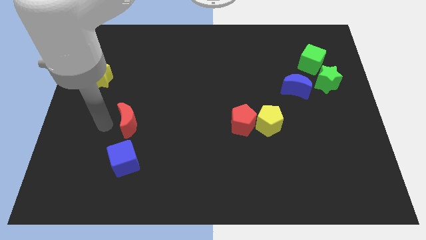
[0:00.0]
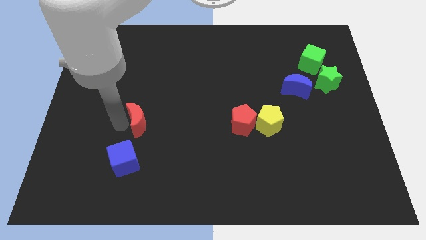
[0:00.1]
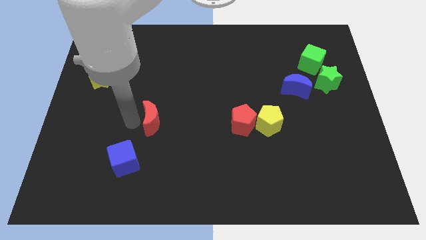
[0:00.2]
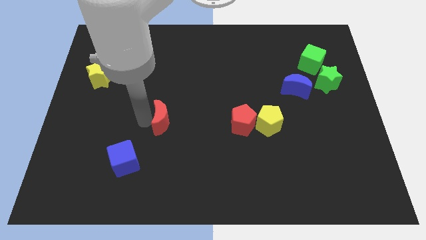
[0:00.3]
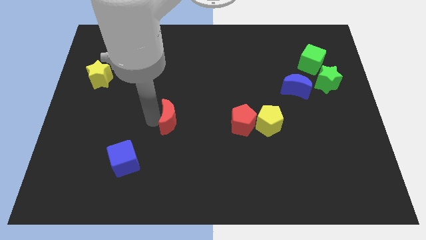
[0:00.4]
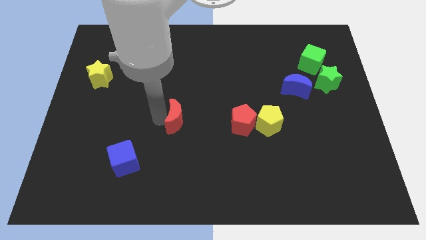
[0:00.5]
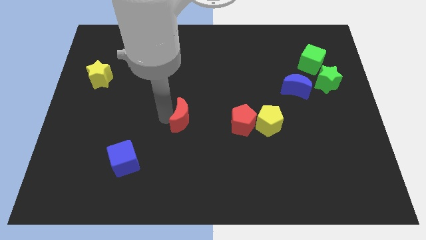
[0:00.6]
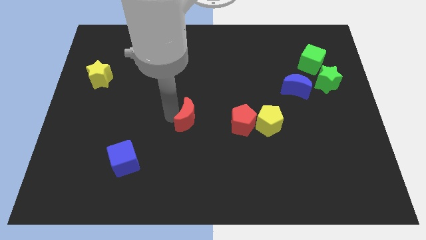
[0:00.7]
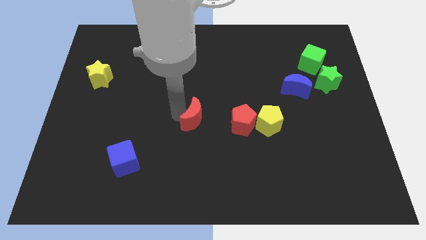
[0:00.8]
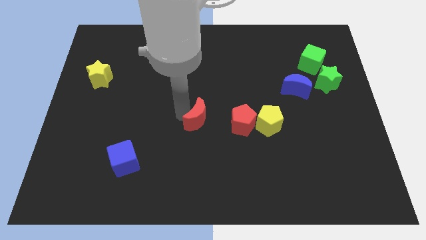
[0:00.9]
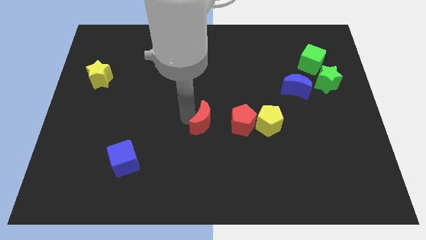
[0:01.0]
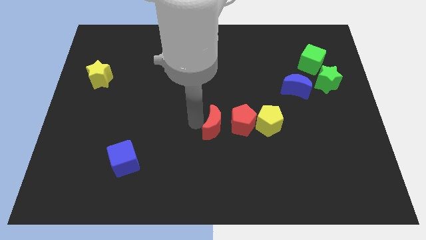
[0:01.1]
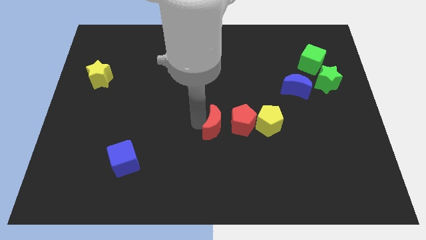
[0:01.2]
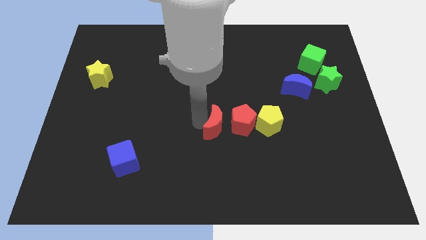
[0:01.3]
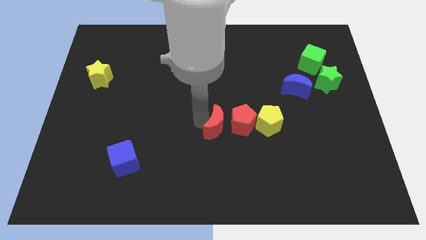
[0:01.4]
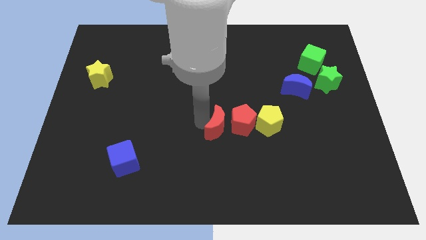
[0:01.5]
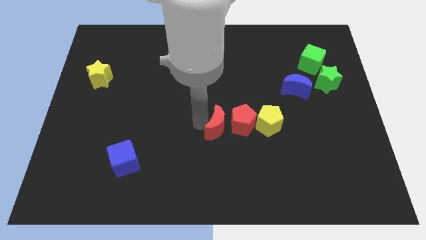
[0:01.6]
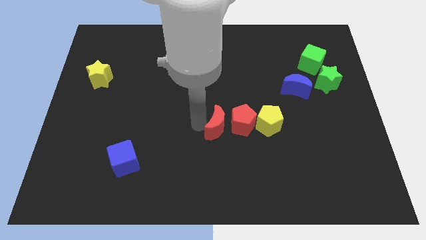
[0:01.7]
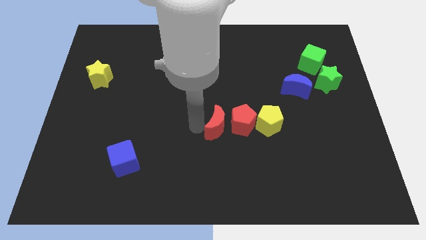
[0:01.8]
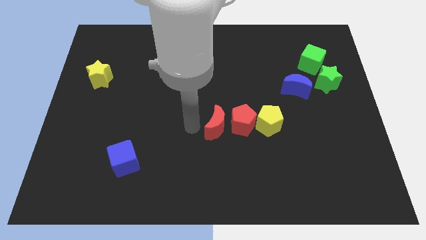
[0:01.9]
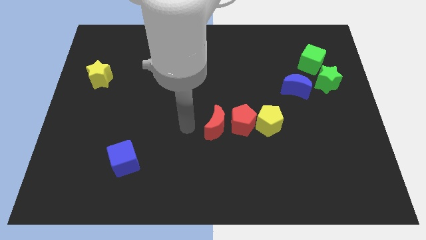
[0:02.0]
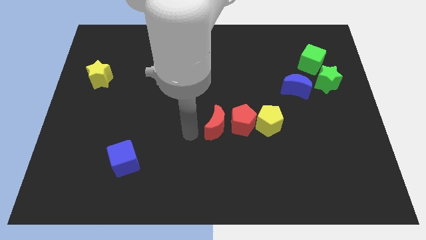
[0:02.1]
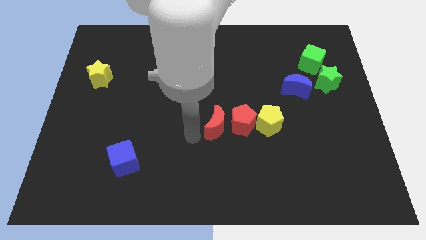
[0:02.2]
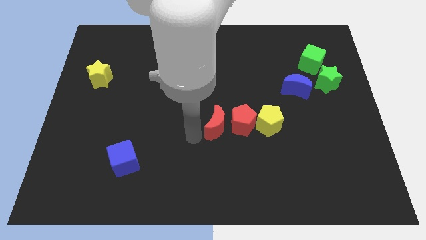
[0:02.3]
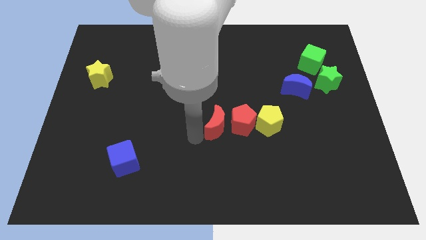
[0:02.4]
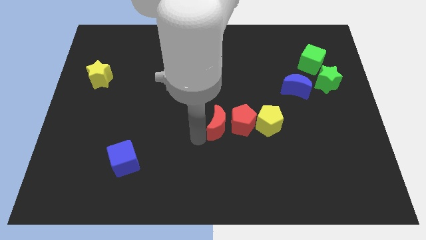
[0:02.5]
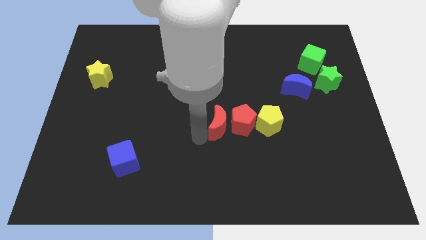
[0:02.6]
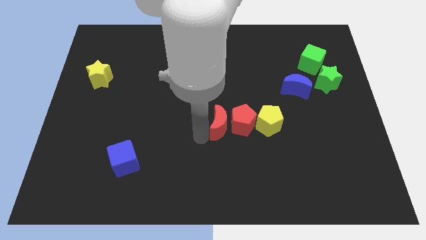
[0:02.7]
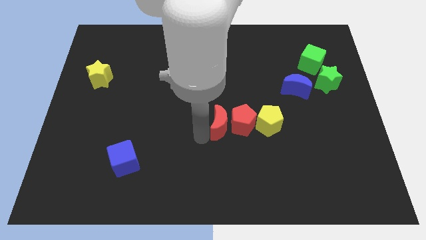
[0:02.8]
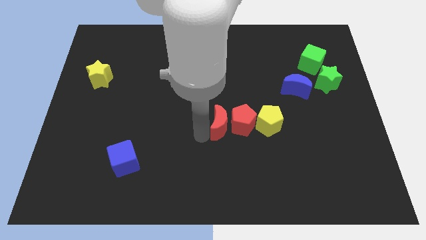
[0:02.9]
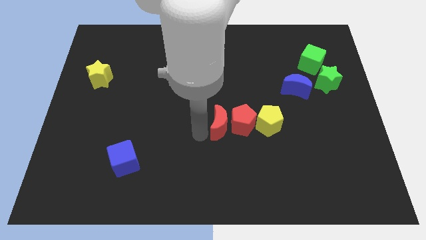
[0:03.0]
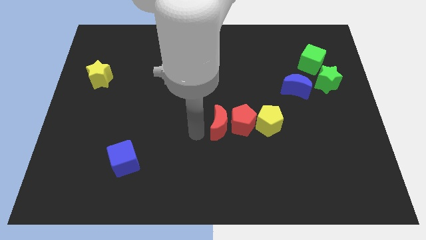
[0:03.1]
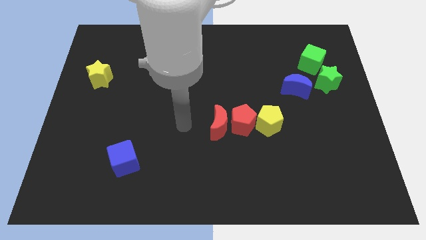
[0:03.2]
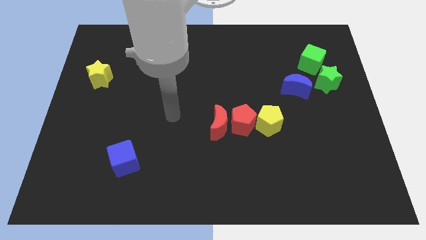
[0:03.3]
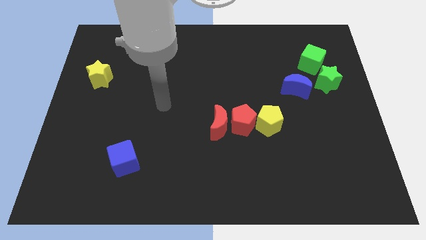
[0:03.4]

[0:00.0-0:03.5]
push the red crescent to the left side of the red pentagon

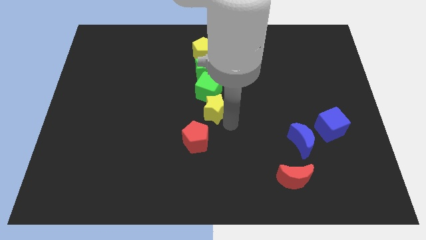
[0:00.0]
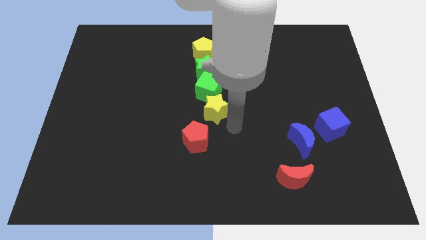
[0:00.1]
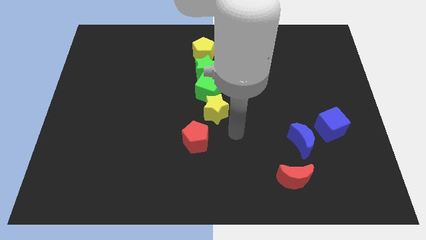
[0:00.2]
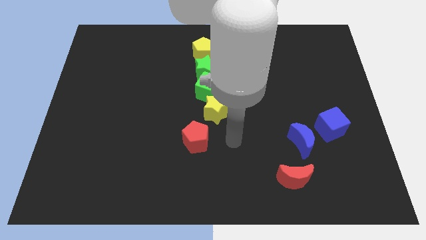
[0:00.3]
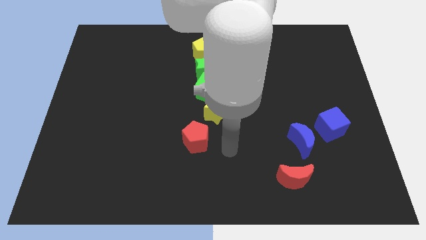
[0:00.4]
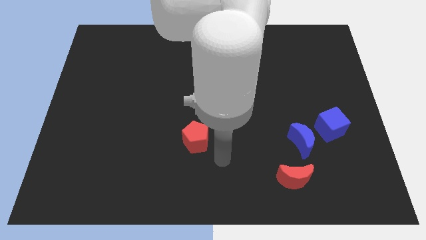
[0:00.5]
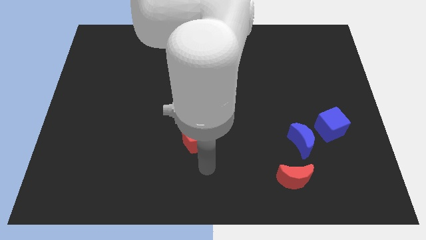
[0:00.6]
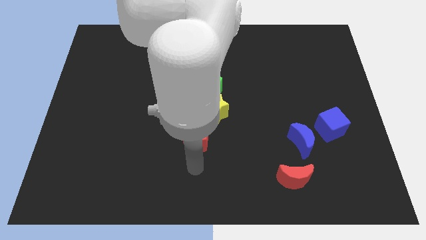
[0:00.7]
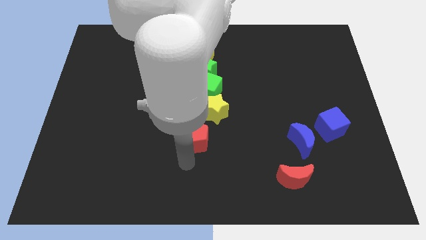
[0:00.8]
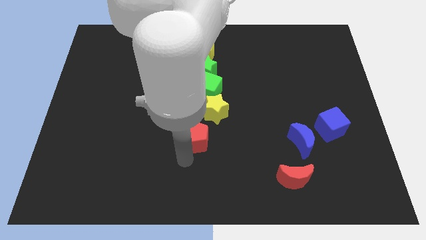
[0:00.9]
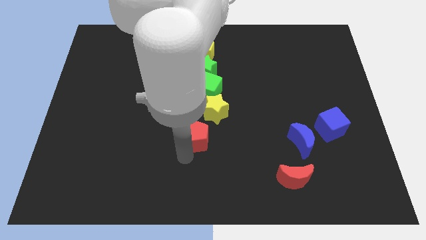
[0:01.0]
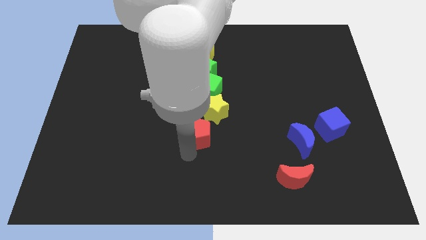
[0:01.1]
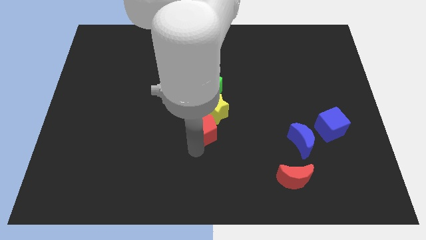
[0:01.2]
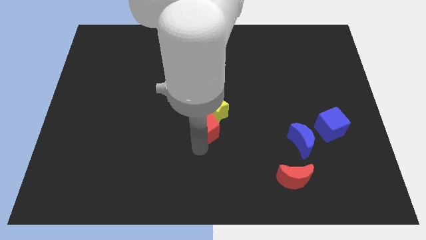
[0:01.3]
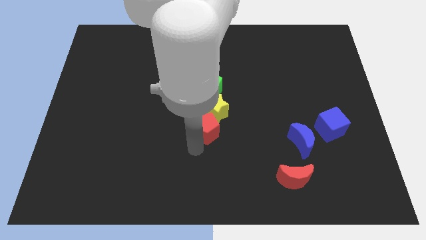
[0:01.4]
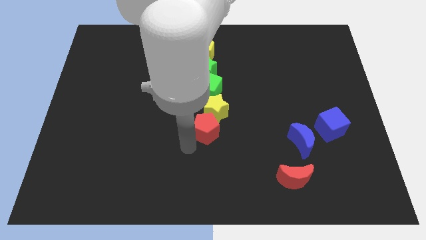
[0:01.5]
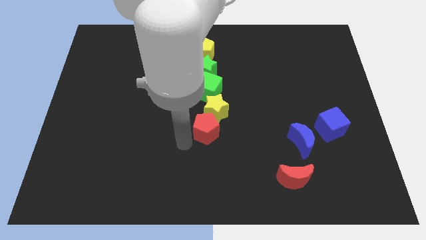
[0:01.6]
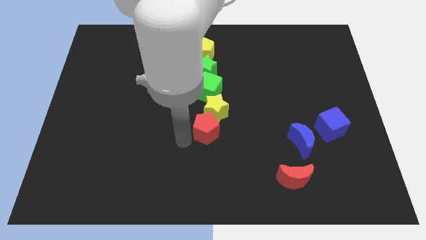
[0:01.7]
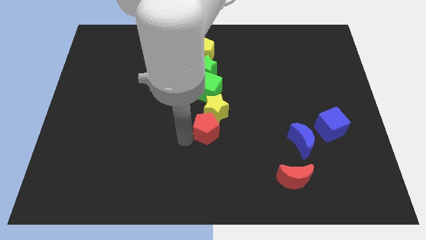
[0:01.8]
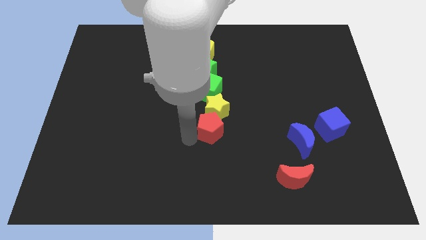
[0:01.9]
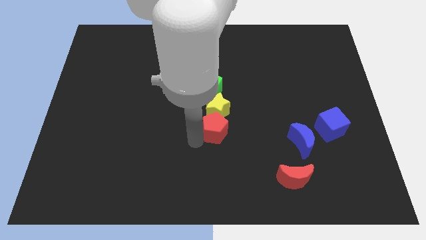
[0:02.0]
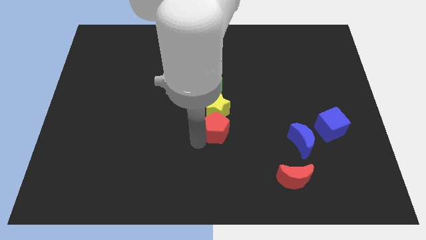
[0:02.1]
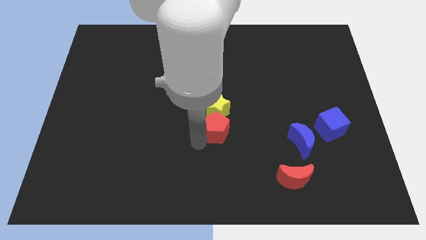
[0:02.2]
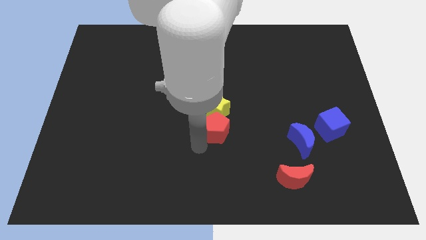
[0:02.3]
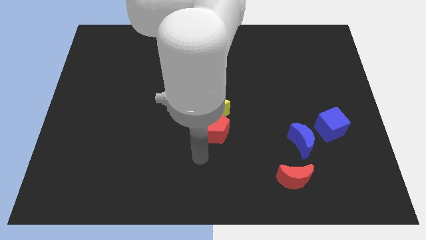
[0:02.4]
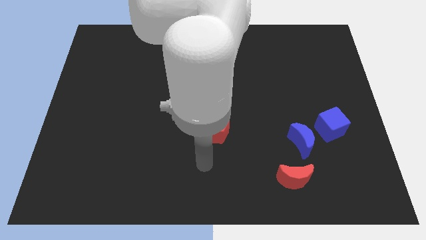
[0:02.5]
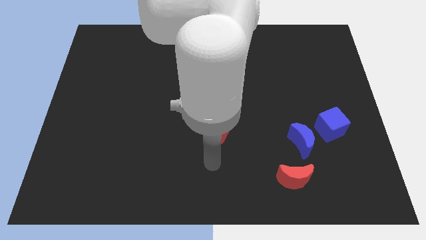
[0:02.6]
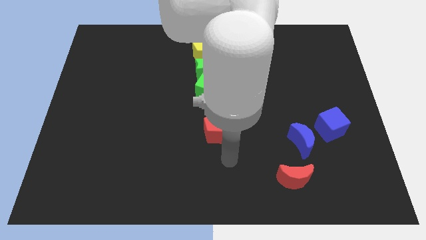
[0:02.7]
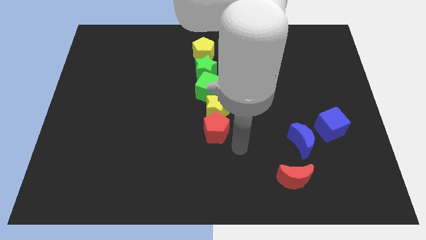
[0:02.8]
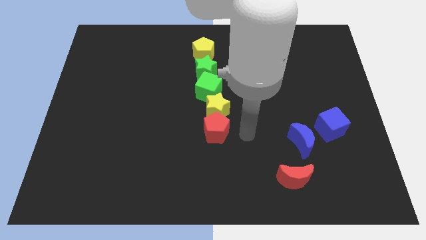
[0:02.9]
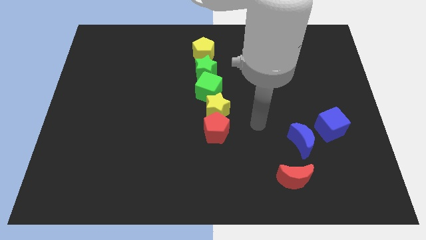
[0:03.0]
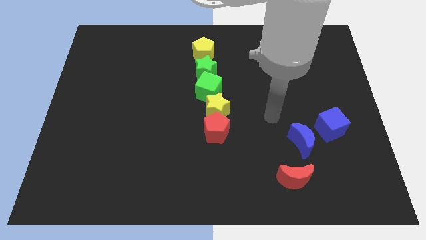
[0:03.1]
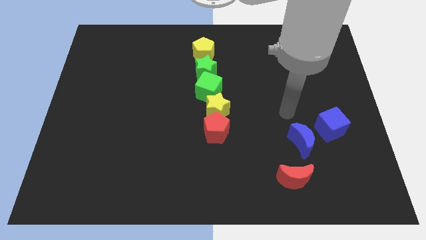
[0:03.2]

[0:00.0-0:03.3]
adjust the red pentagon to the make the vertical line

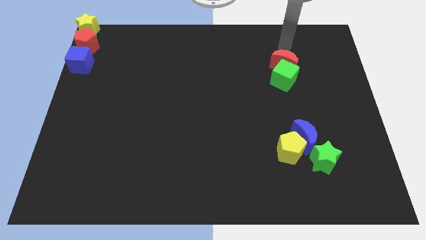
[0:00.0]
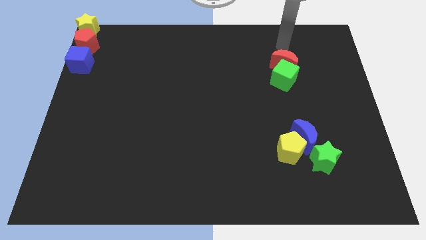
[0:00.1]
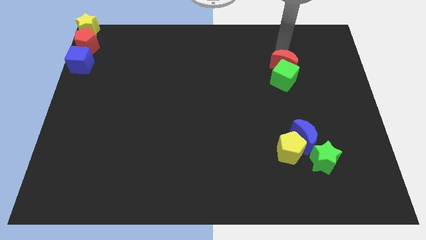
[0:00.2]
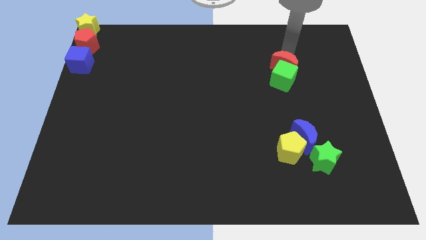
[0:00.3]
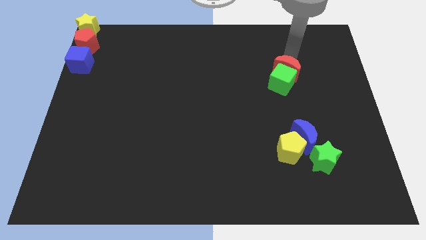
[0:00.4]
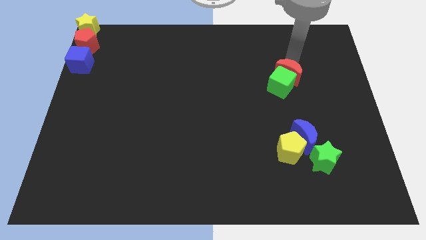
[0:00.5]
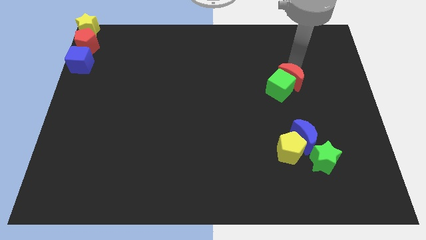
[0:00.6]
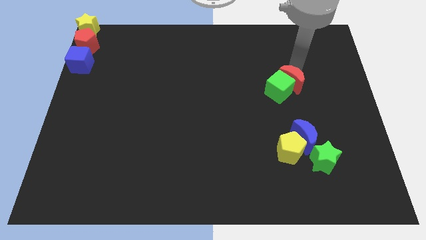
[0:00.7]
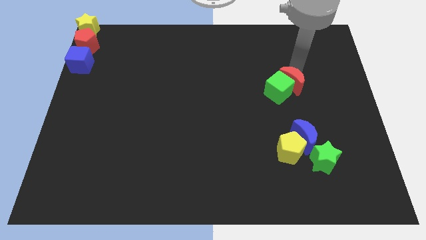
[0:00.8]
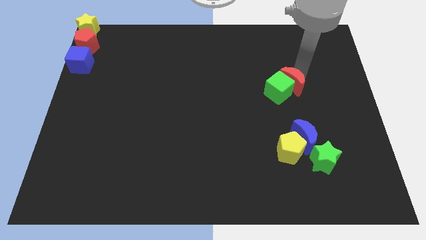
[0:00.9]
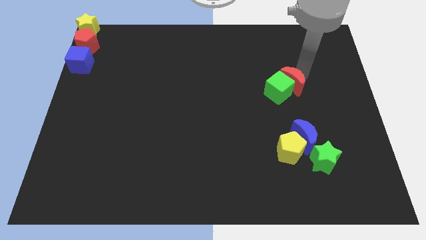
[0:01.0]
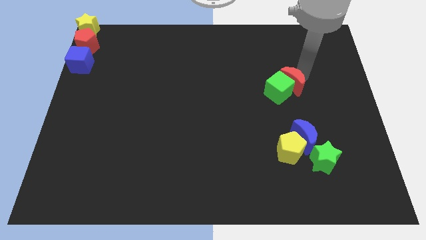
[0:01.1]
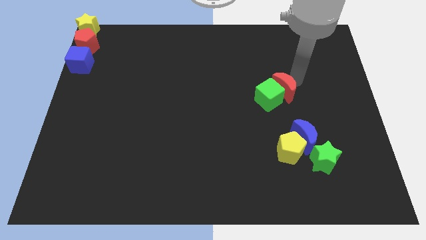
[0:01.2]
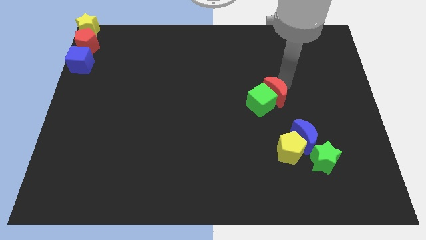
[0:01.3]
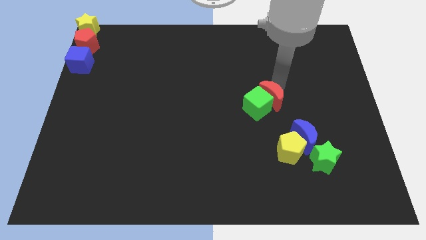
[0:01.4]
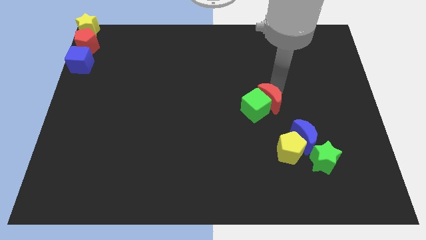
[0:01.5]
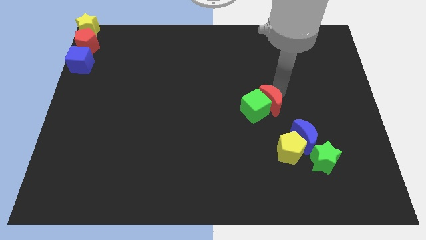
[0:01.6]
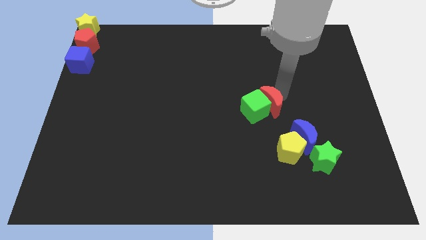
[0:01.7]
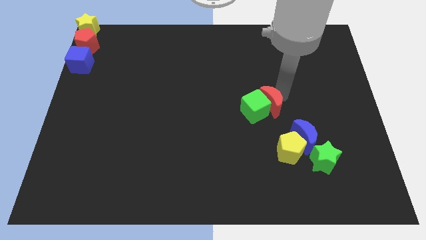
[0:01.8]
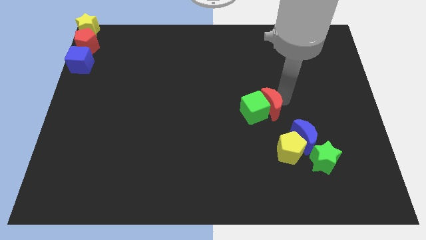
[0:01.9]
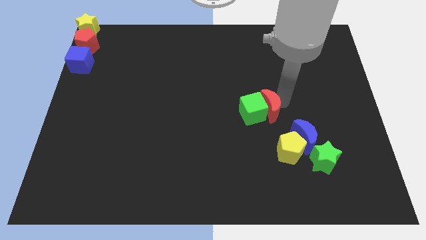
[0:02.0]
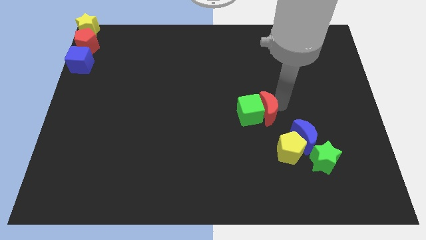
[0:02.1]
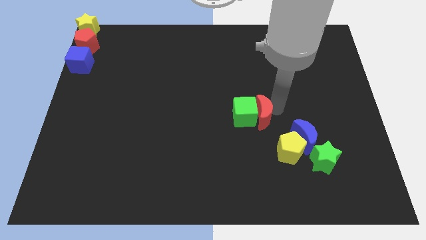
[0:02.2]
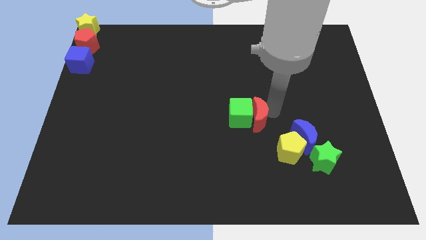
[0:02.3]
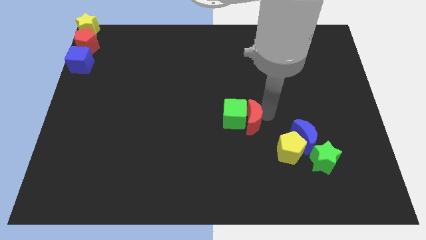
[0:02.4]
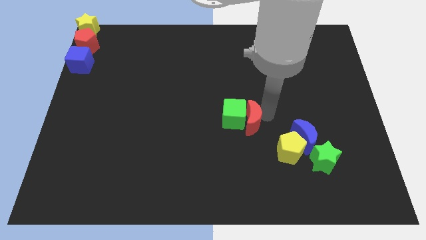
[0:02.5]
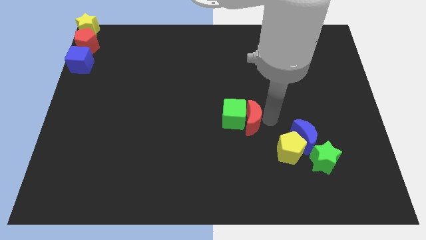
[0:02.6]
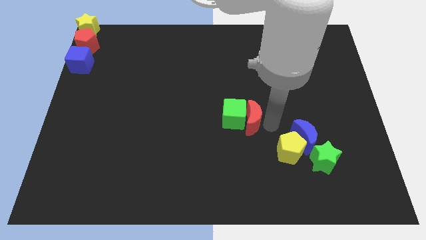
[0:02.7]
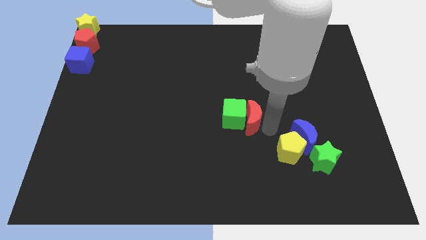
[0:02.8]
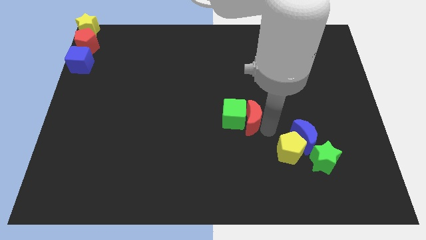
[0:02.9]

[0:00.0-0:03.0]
place the red moon to the right of the green cube
